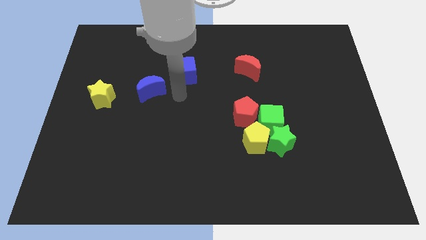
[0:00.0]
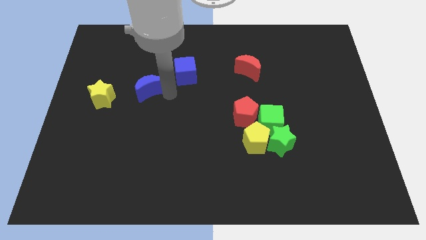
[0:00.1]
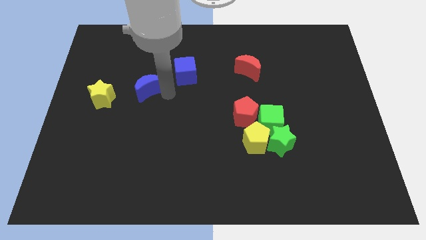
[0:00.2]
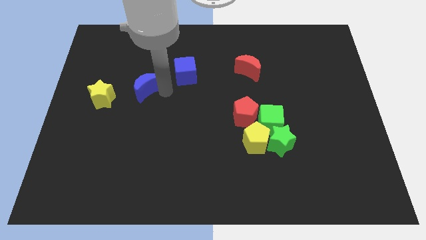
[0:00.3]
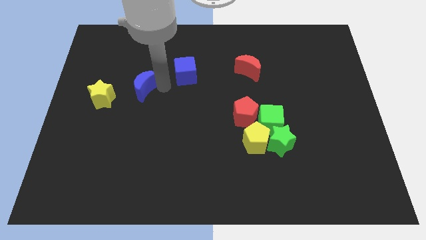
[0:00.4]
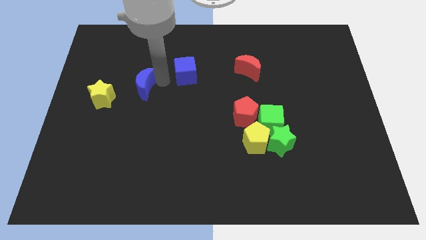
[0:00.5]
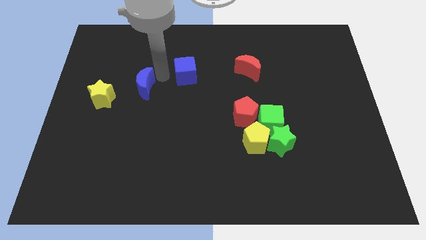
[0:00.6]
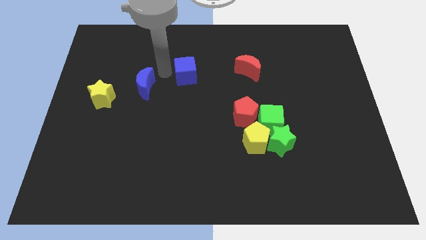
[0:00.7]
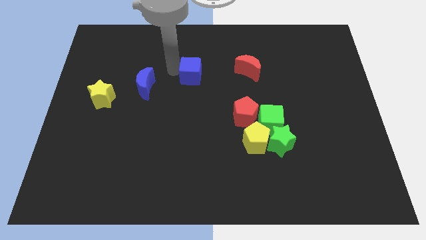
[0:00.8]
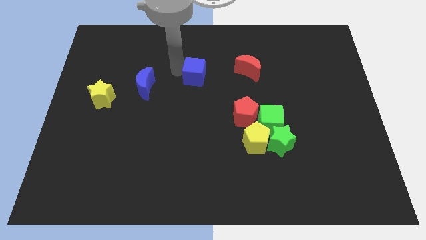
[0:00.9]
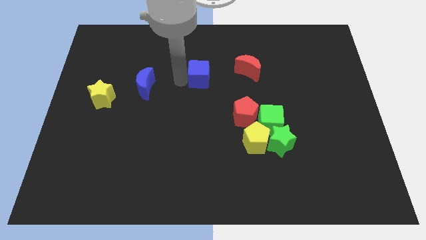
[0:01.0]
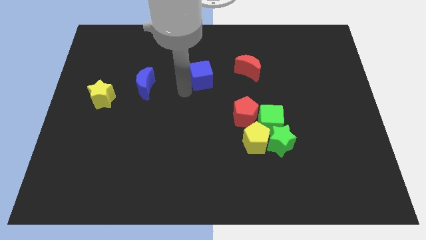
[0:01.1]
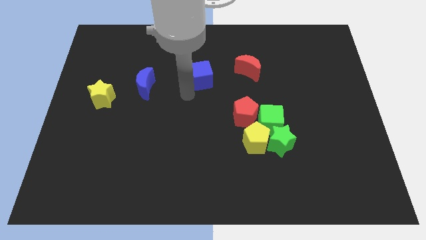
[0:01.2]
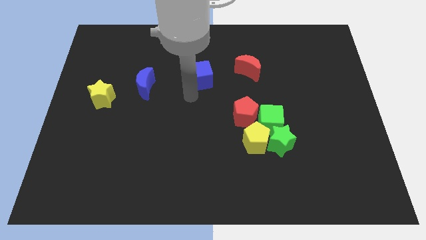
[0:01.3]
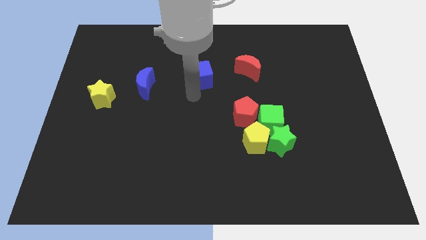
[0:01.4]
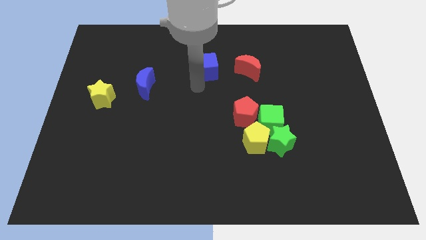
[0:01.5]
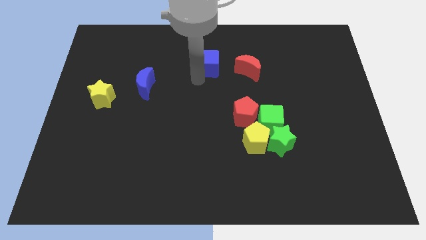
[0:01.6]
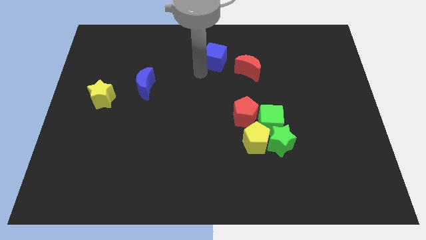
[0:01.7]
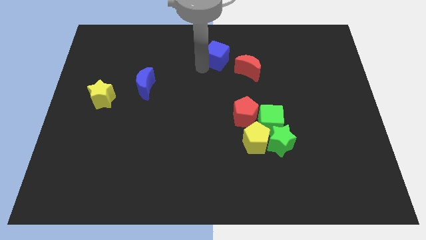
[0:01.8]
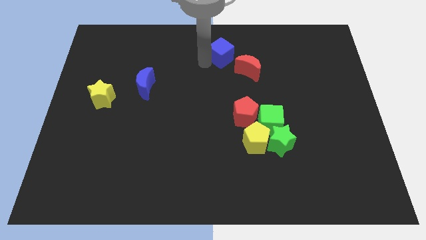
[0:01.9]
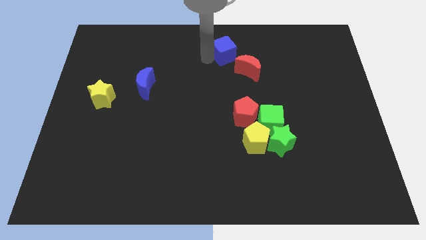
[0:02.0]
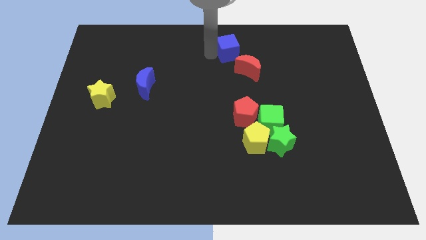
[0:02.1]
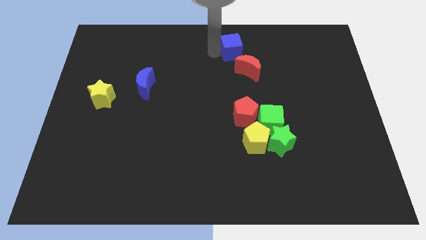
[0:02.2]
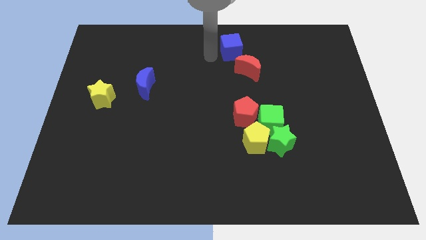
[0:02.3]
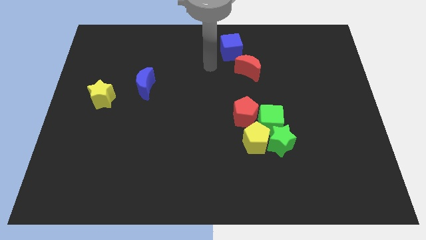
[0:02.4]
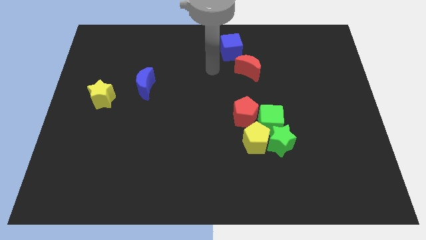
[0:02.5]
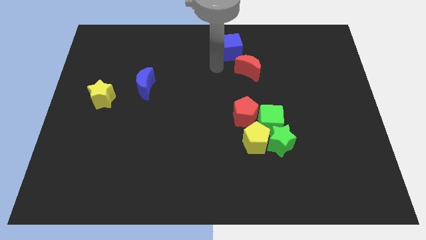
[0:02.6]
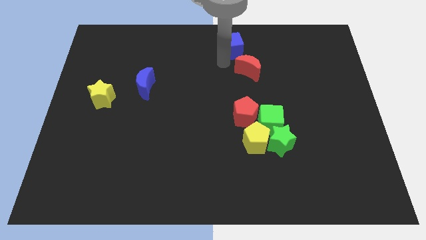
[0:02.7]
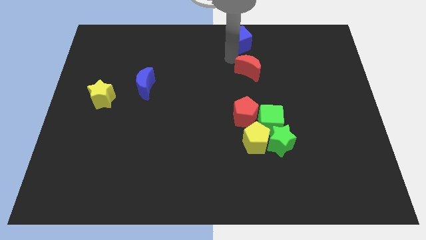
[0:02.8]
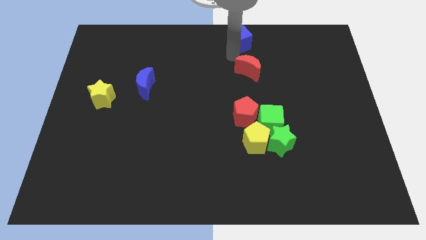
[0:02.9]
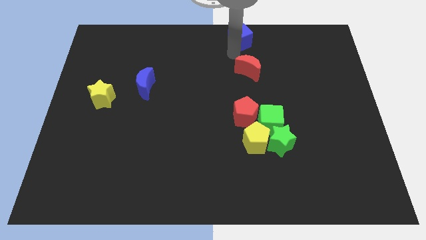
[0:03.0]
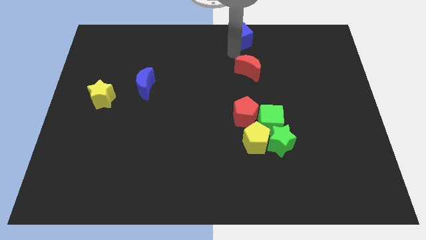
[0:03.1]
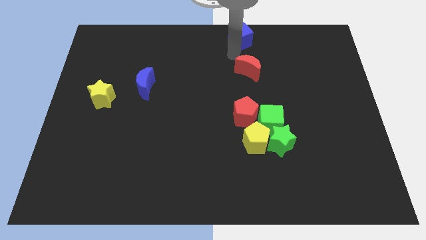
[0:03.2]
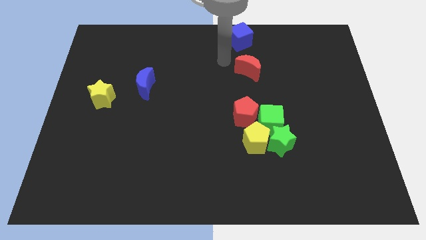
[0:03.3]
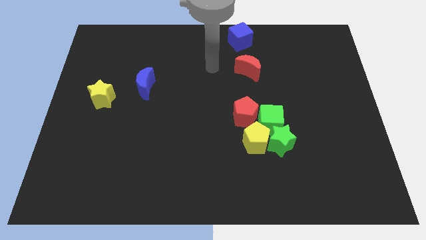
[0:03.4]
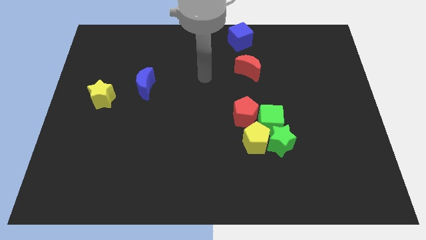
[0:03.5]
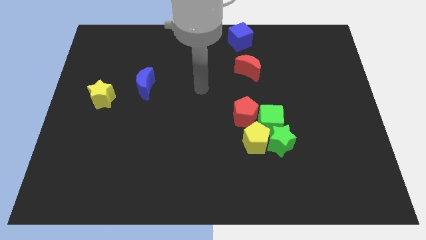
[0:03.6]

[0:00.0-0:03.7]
move the blue cube to the top side of the red moon

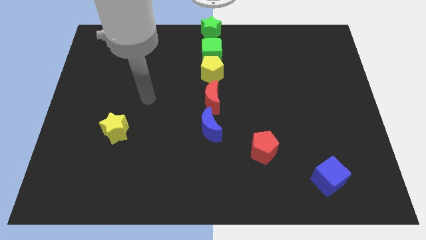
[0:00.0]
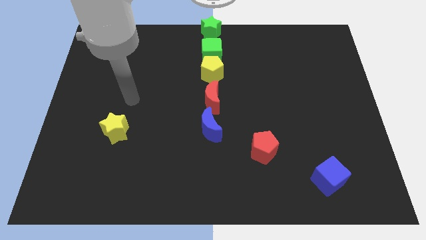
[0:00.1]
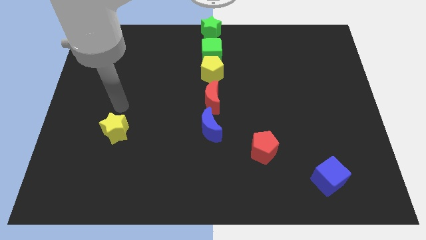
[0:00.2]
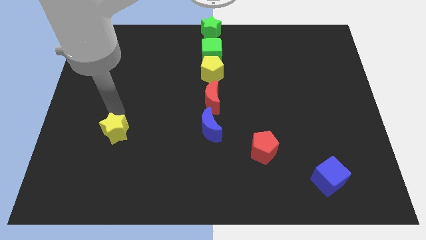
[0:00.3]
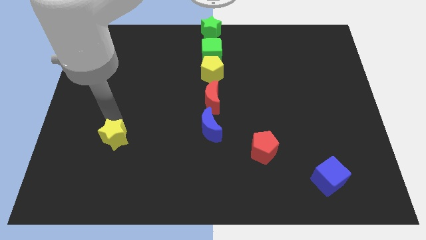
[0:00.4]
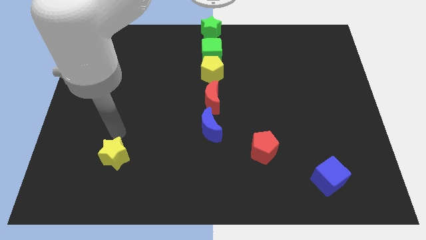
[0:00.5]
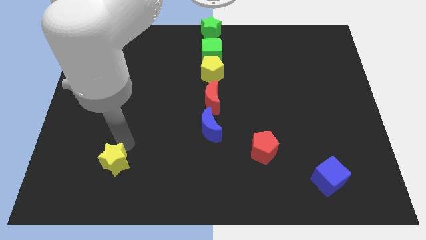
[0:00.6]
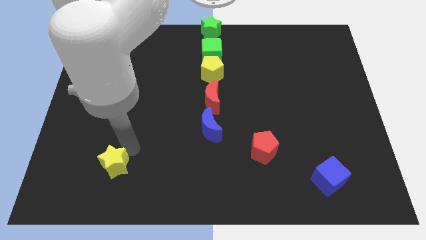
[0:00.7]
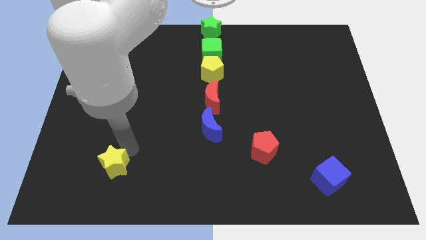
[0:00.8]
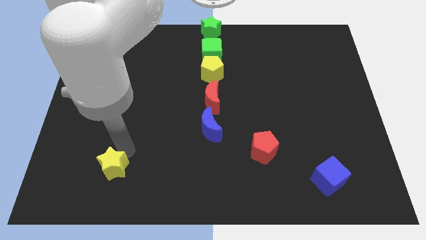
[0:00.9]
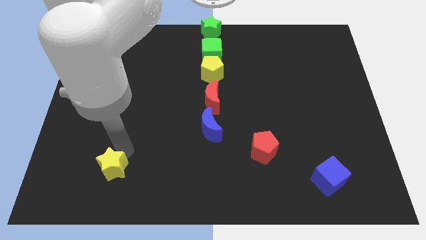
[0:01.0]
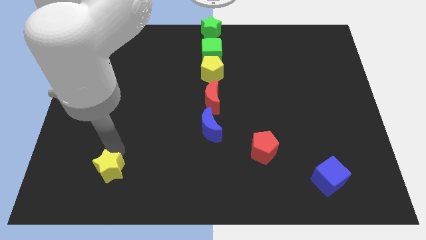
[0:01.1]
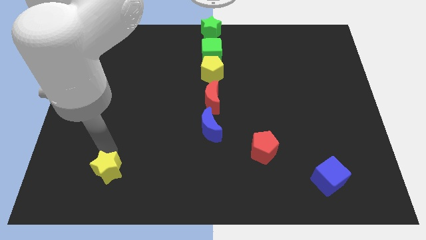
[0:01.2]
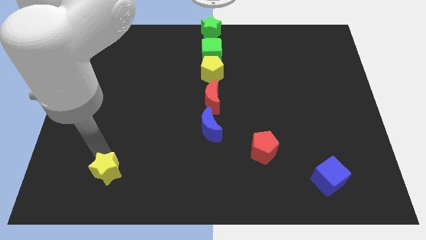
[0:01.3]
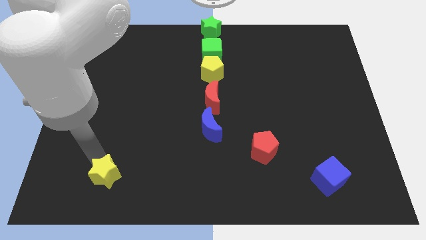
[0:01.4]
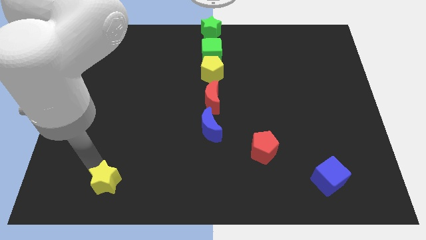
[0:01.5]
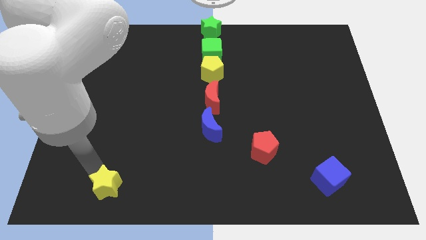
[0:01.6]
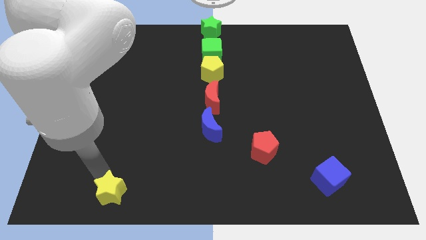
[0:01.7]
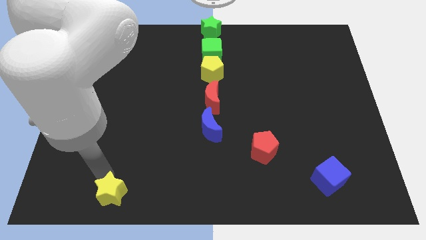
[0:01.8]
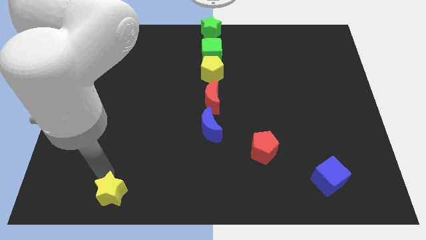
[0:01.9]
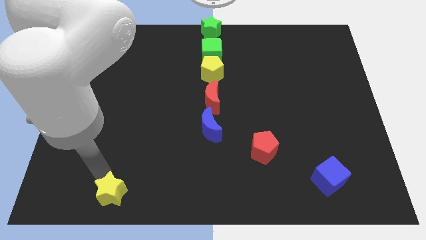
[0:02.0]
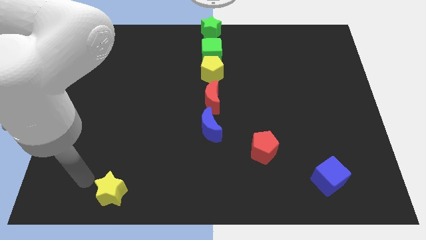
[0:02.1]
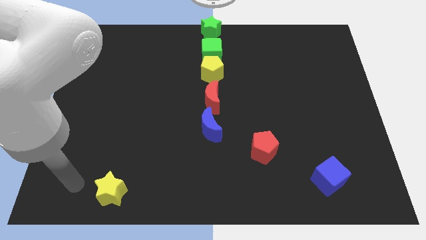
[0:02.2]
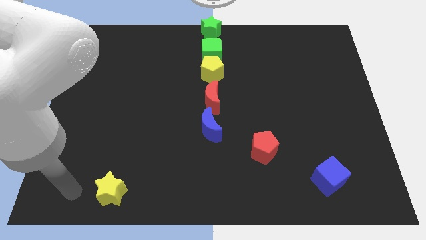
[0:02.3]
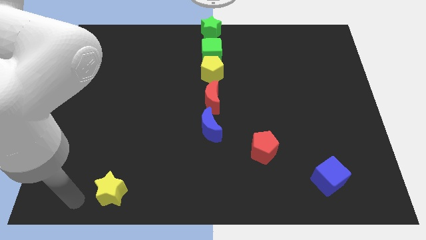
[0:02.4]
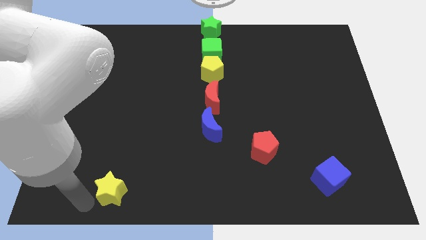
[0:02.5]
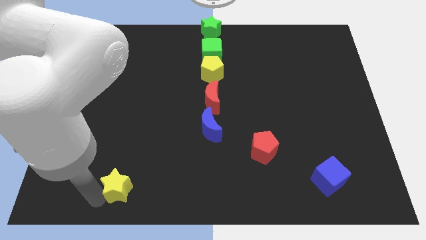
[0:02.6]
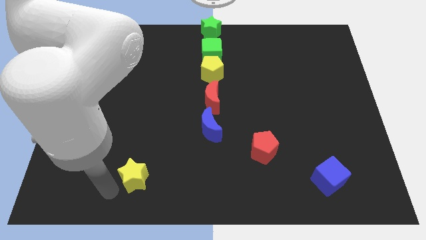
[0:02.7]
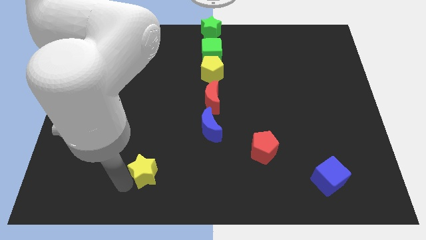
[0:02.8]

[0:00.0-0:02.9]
move the yellow star diagonal left of blue moon

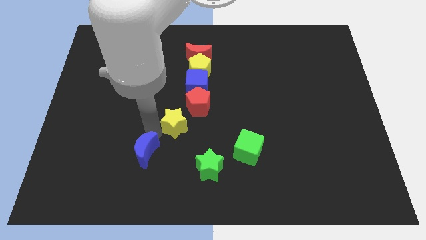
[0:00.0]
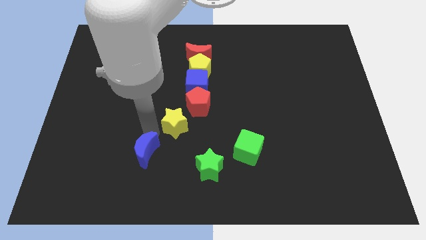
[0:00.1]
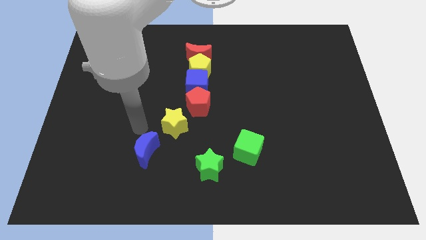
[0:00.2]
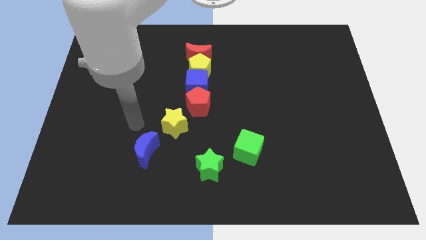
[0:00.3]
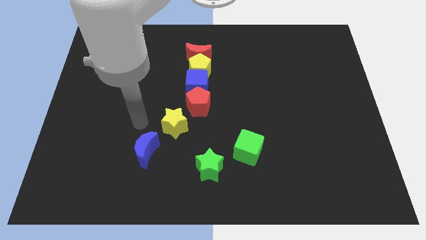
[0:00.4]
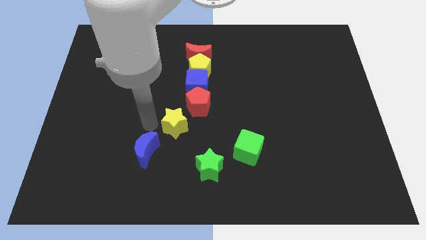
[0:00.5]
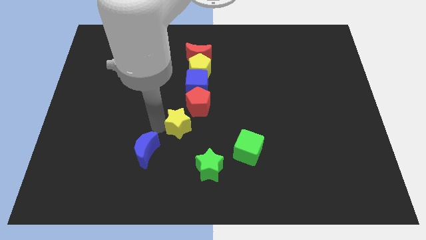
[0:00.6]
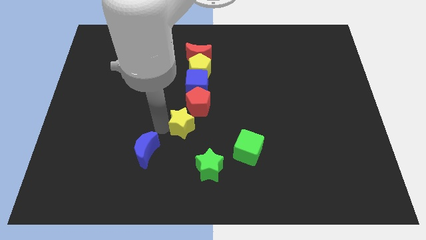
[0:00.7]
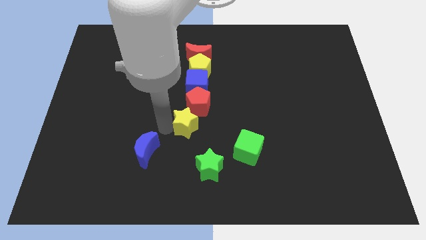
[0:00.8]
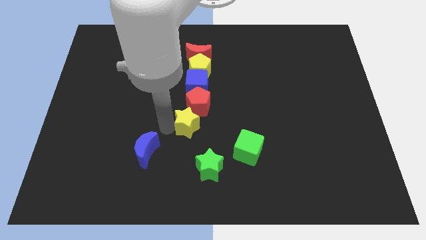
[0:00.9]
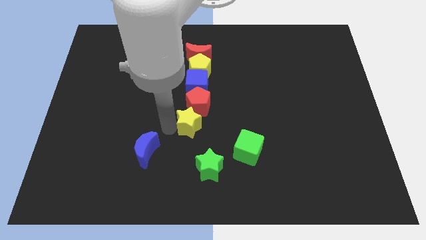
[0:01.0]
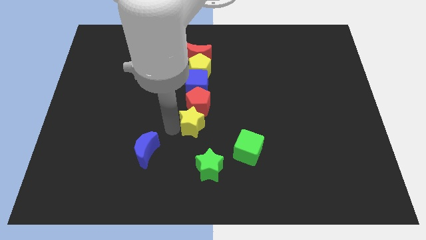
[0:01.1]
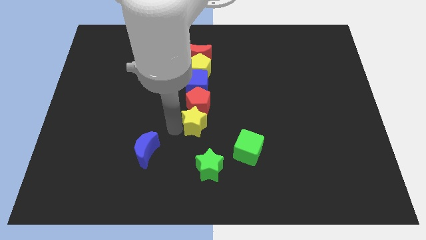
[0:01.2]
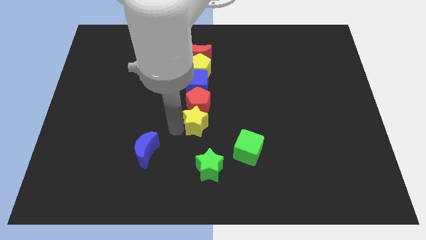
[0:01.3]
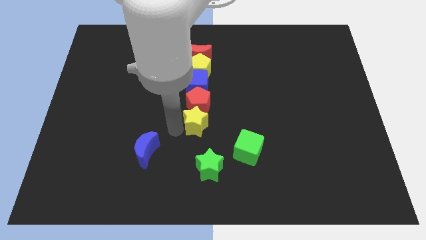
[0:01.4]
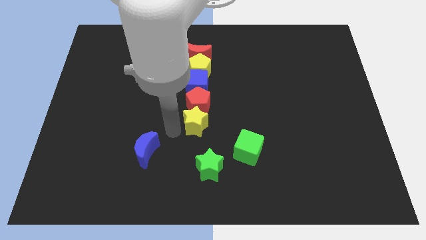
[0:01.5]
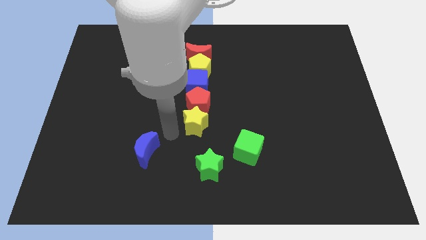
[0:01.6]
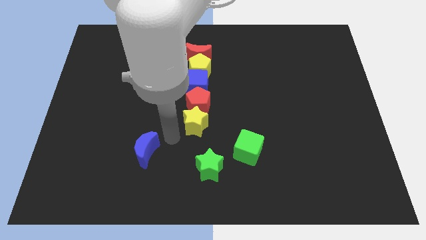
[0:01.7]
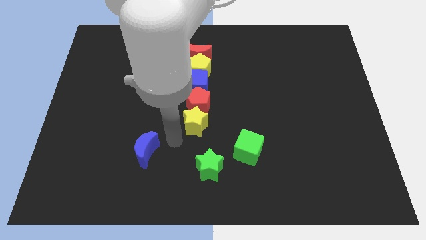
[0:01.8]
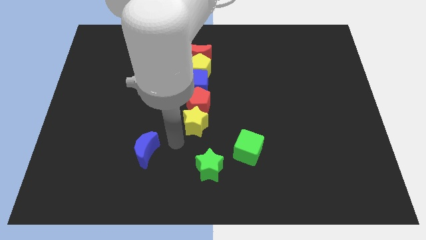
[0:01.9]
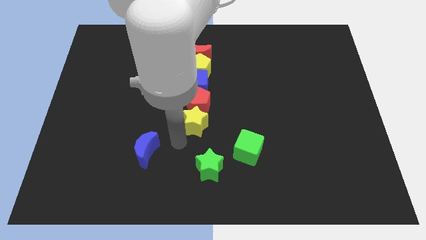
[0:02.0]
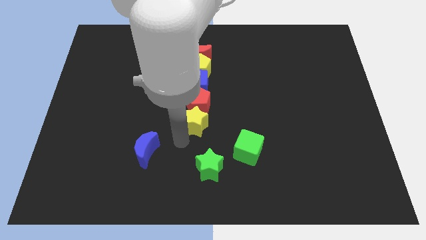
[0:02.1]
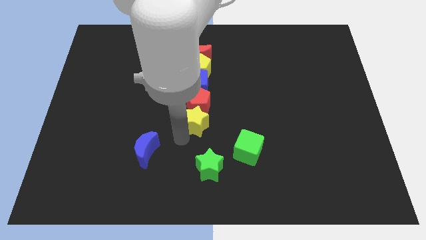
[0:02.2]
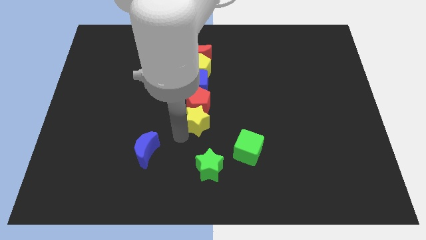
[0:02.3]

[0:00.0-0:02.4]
move the yellow star below the red pentagon
